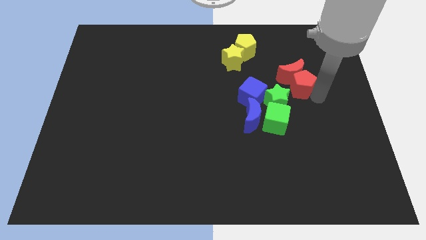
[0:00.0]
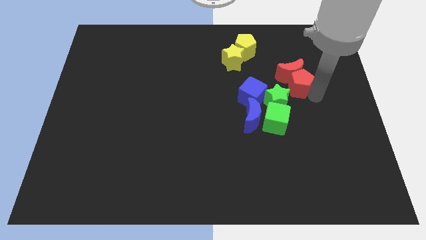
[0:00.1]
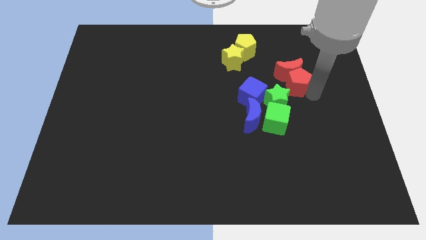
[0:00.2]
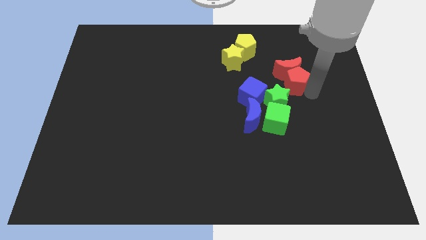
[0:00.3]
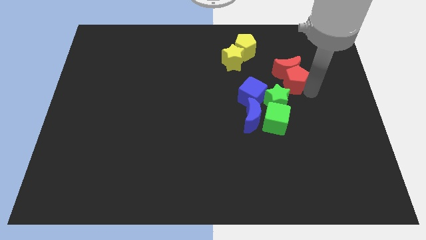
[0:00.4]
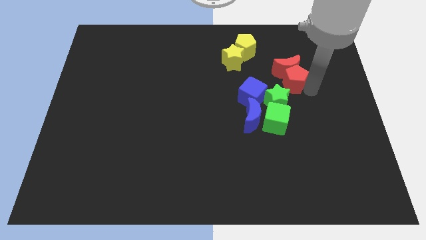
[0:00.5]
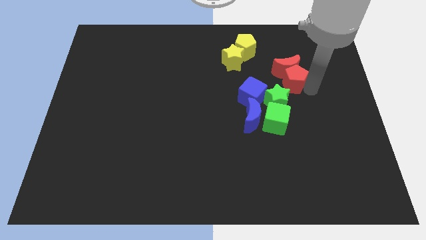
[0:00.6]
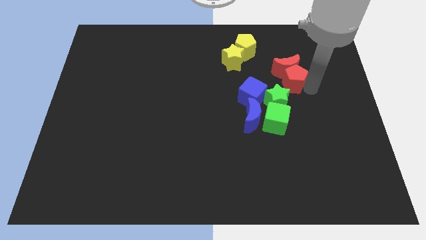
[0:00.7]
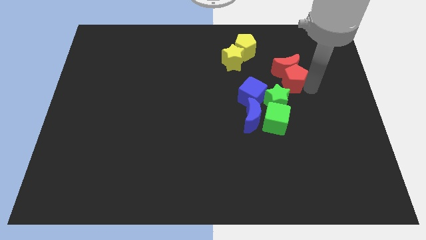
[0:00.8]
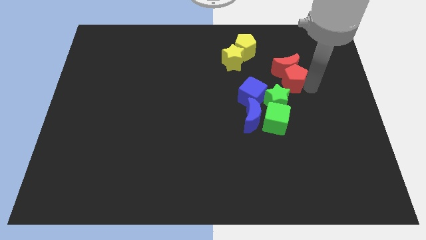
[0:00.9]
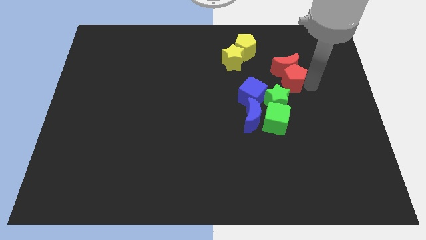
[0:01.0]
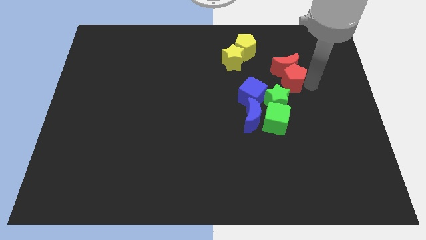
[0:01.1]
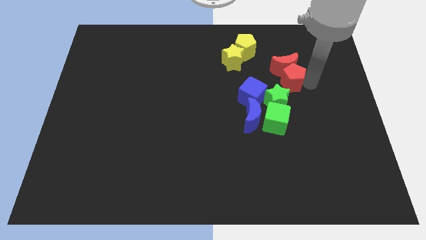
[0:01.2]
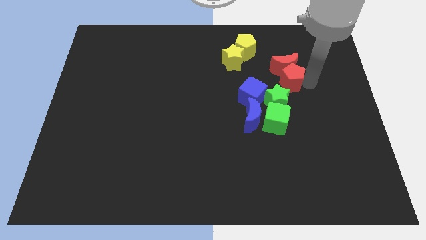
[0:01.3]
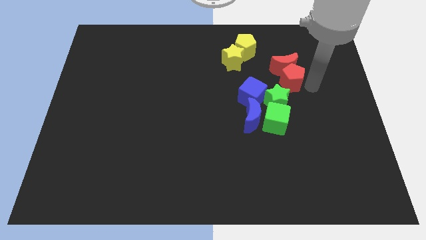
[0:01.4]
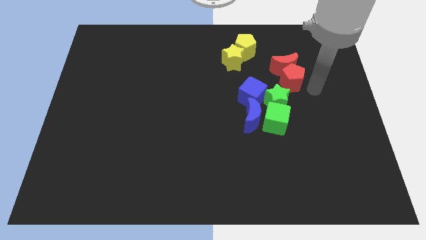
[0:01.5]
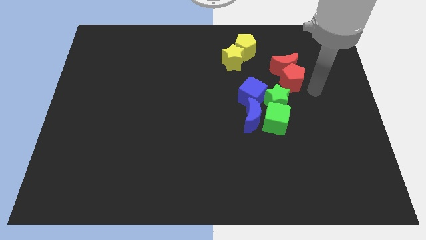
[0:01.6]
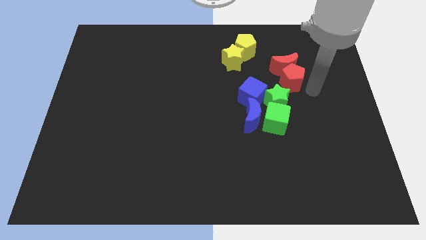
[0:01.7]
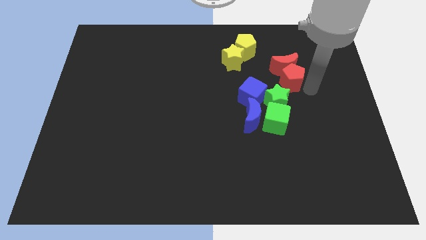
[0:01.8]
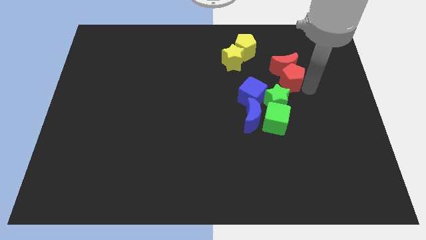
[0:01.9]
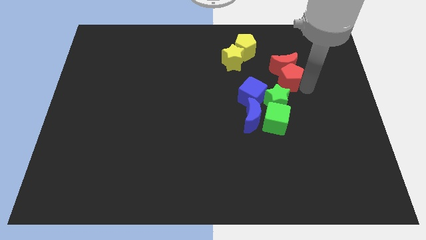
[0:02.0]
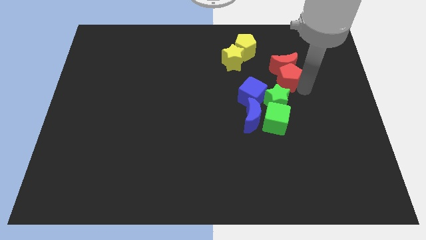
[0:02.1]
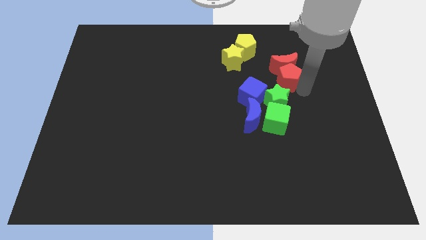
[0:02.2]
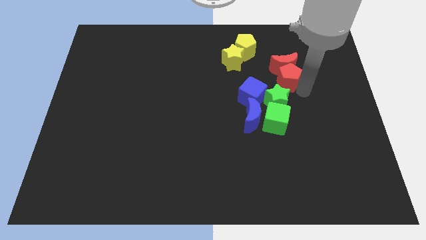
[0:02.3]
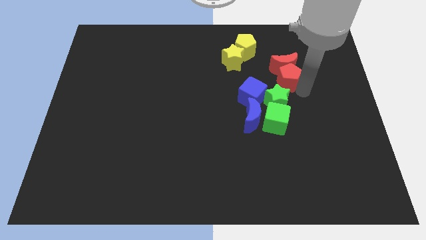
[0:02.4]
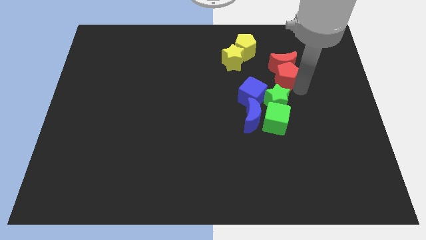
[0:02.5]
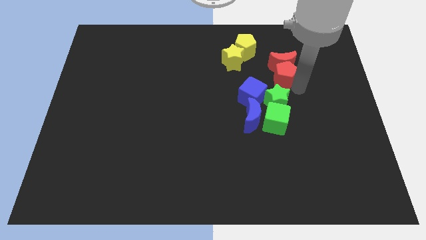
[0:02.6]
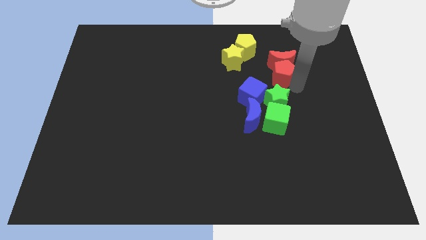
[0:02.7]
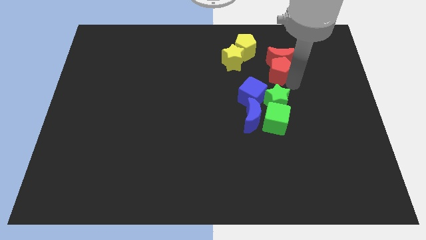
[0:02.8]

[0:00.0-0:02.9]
push red pentagon towards top

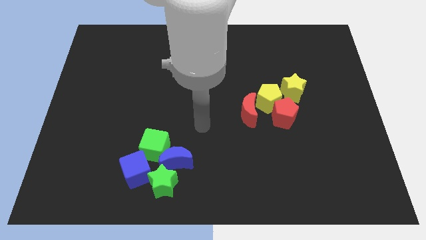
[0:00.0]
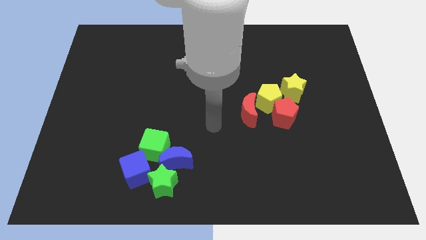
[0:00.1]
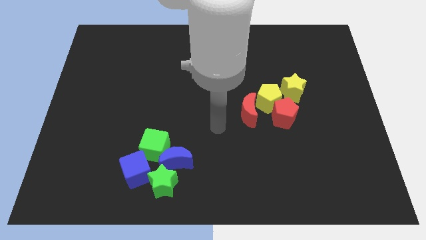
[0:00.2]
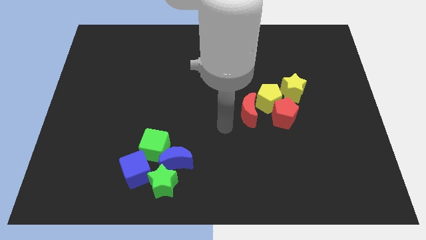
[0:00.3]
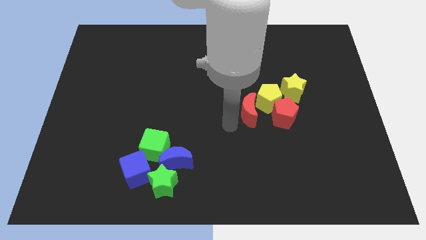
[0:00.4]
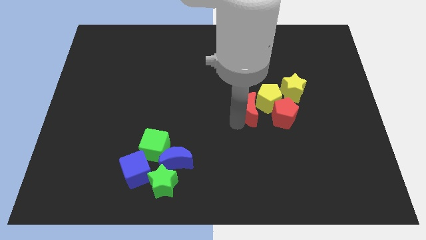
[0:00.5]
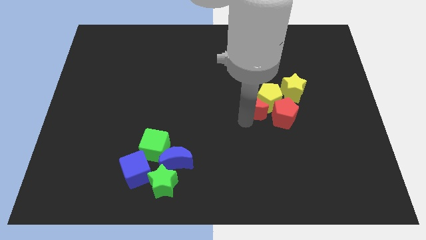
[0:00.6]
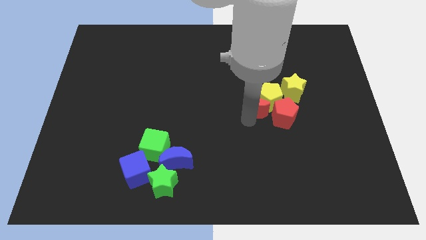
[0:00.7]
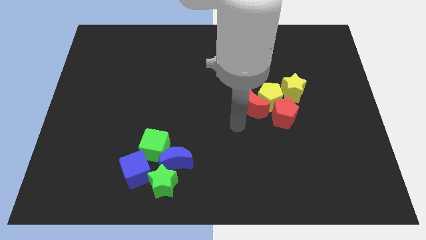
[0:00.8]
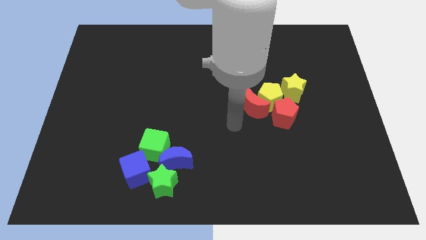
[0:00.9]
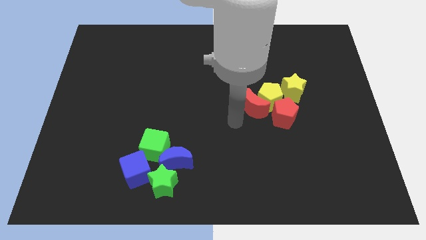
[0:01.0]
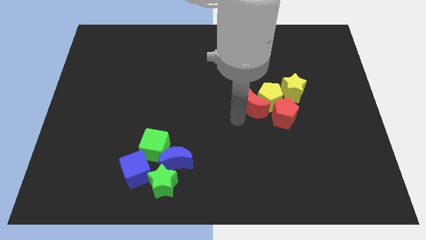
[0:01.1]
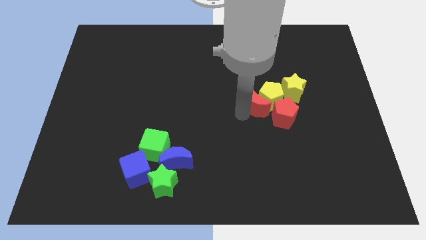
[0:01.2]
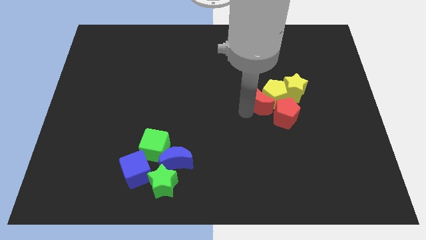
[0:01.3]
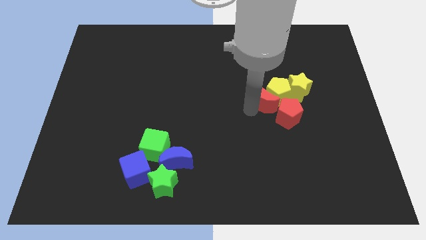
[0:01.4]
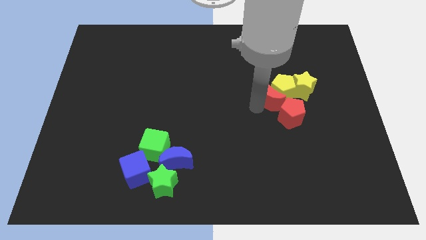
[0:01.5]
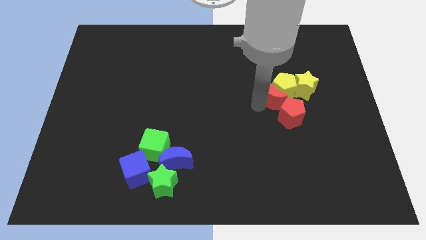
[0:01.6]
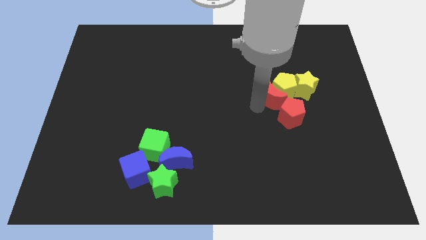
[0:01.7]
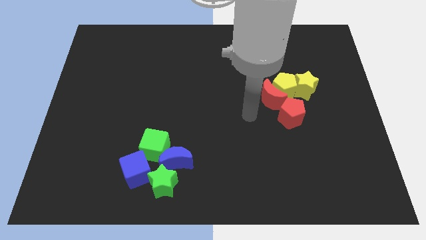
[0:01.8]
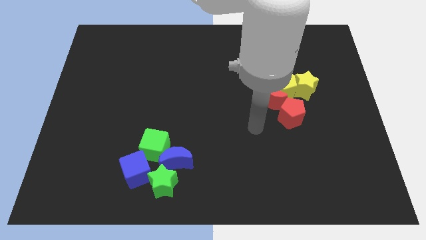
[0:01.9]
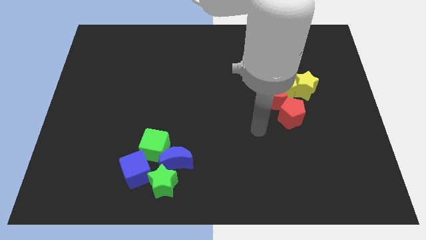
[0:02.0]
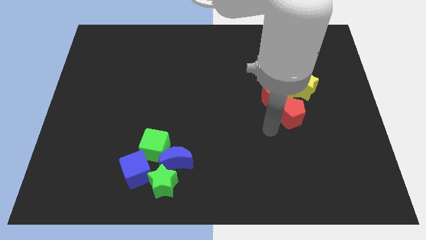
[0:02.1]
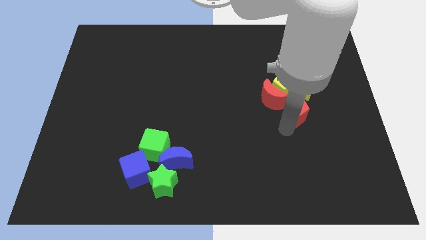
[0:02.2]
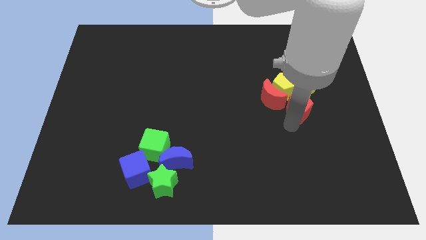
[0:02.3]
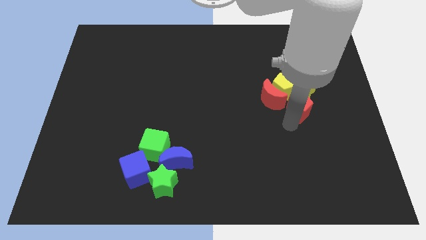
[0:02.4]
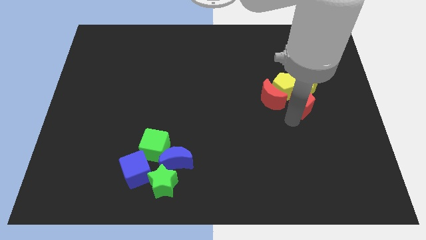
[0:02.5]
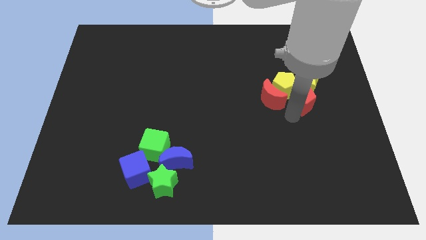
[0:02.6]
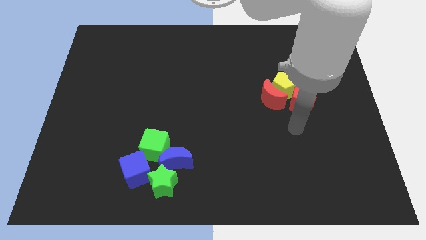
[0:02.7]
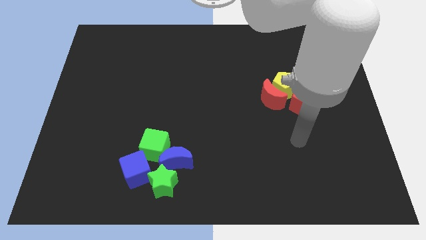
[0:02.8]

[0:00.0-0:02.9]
push the red blocks into yellow blocks

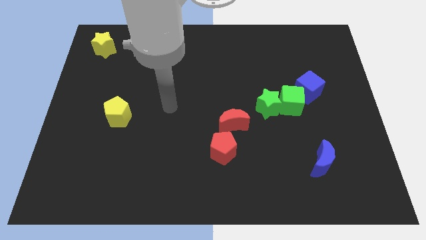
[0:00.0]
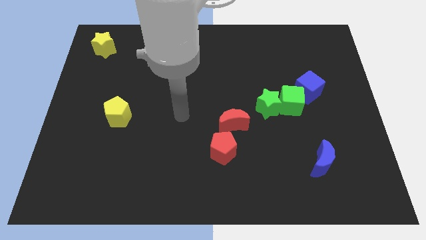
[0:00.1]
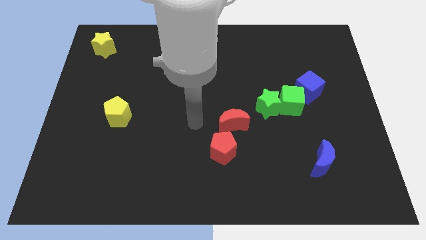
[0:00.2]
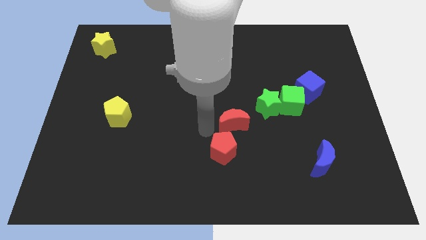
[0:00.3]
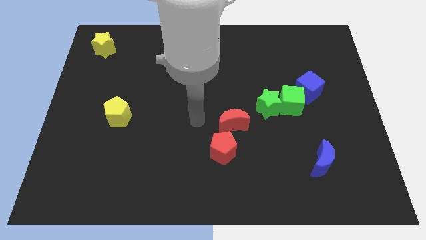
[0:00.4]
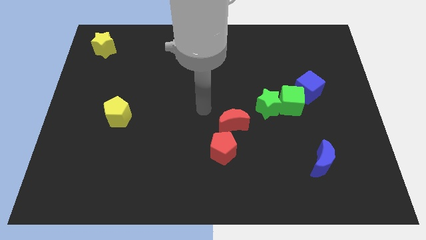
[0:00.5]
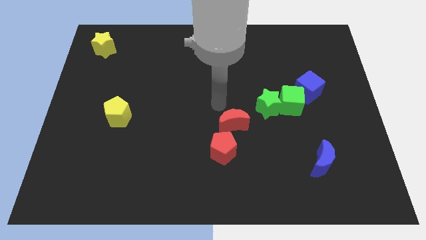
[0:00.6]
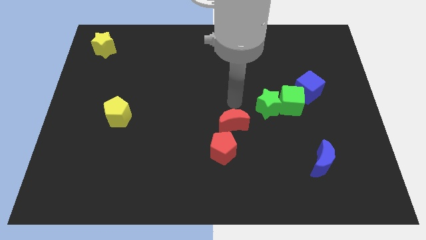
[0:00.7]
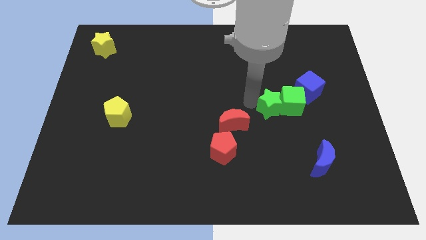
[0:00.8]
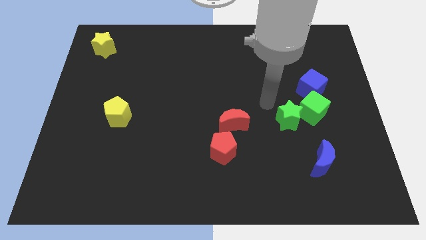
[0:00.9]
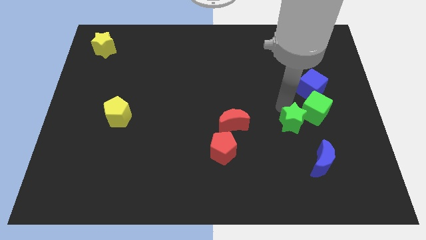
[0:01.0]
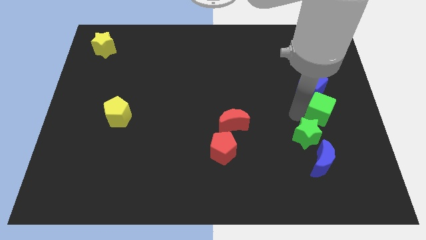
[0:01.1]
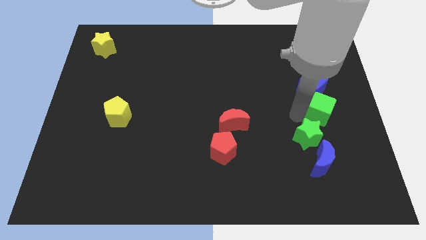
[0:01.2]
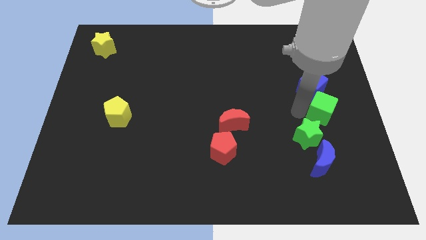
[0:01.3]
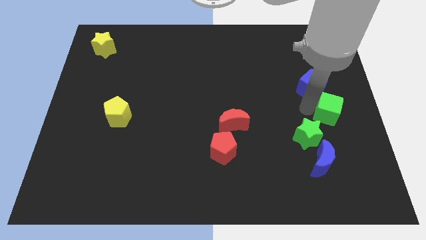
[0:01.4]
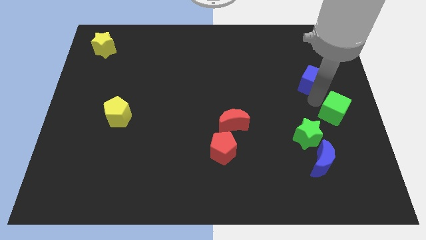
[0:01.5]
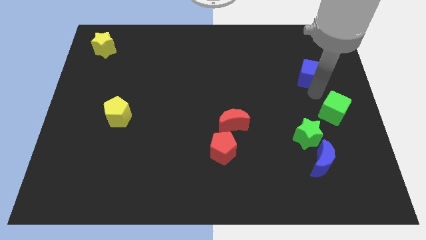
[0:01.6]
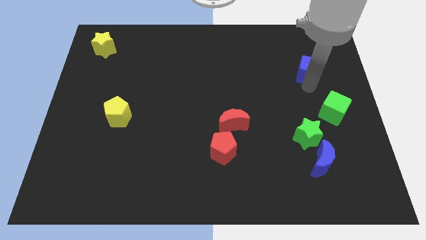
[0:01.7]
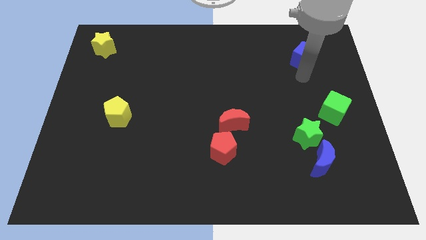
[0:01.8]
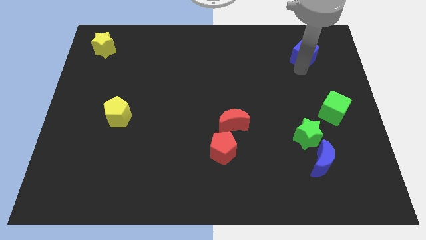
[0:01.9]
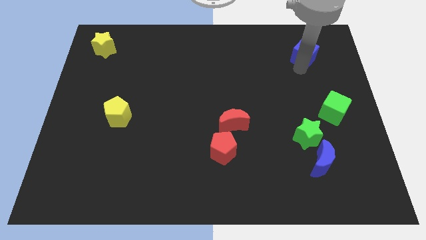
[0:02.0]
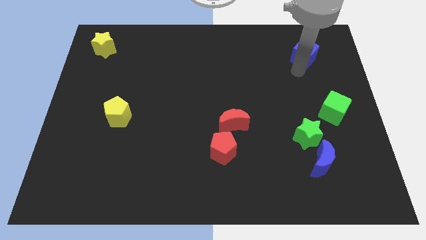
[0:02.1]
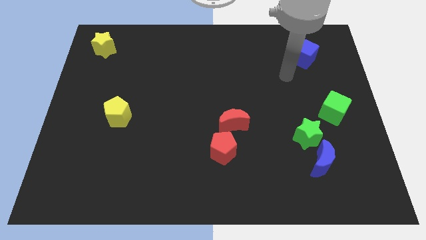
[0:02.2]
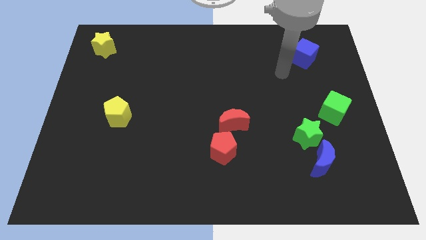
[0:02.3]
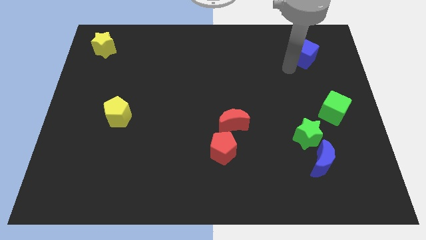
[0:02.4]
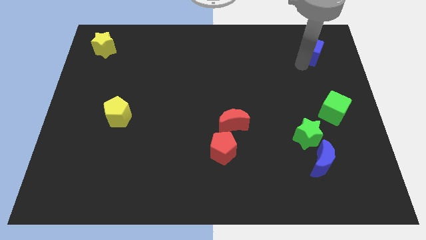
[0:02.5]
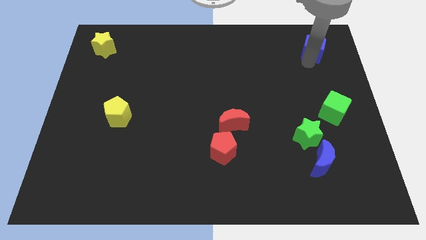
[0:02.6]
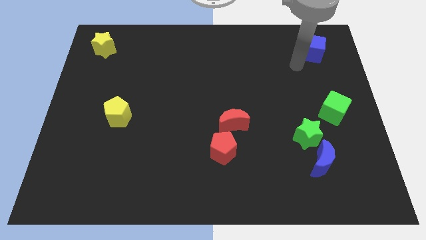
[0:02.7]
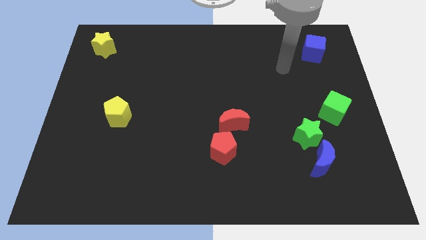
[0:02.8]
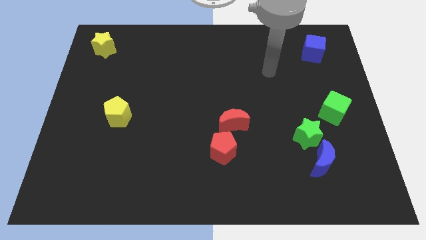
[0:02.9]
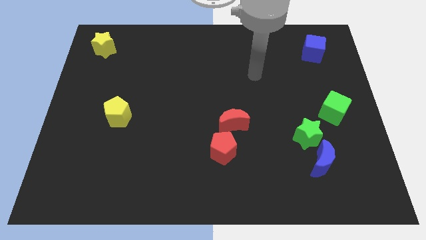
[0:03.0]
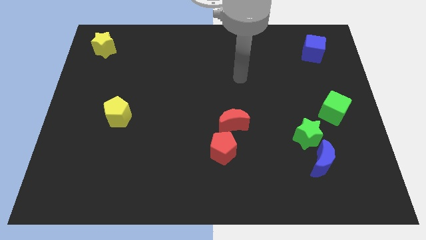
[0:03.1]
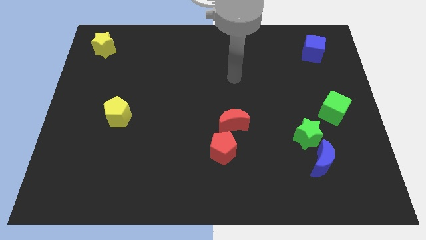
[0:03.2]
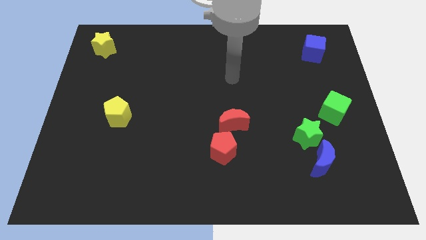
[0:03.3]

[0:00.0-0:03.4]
push the blue cube away from the green cube
